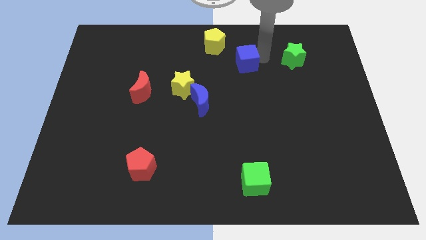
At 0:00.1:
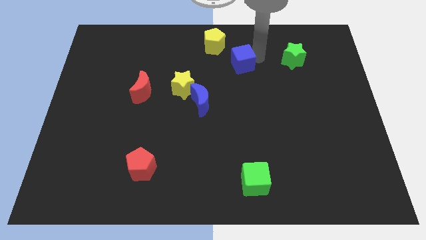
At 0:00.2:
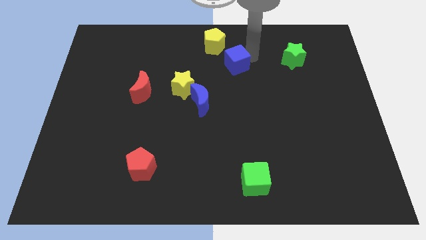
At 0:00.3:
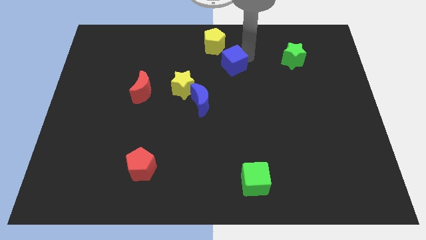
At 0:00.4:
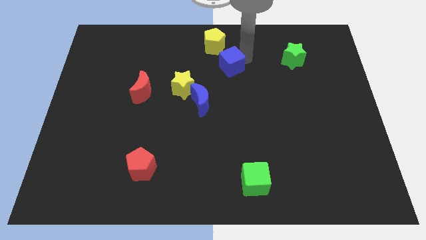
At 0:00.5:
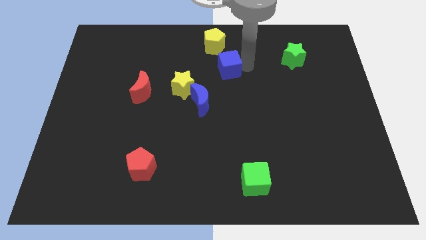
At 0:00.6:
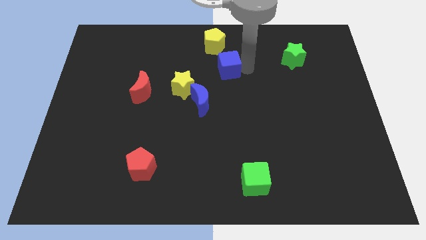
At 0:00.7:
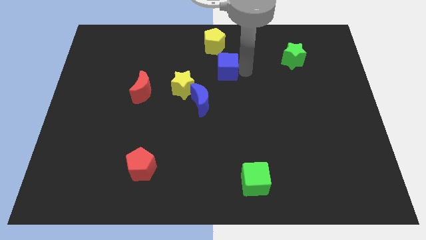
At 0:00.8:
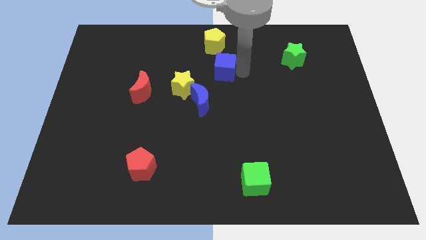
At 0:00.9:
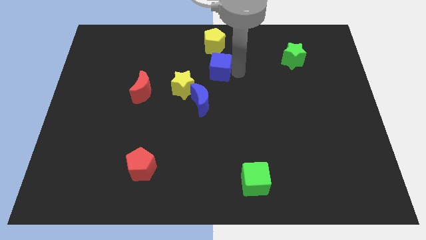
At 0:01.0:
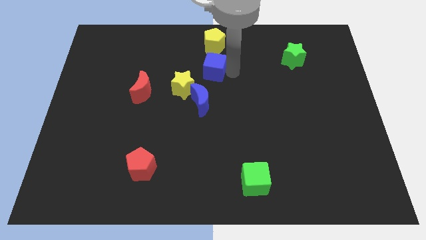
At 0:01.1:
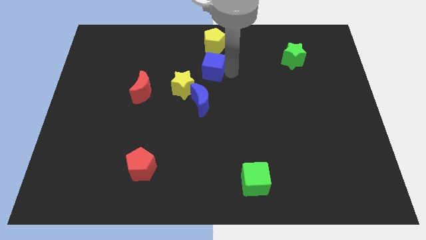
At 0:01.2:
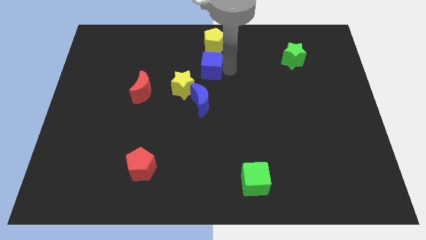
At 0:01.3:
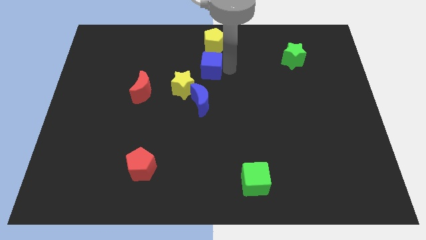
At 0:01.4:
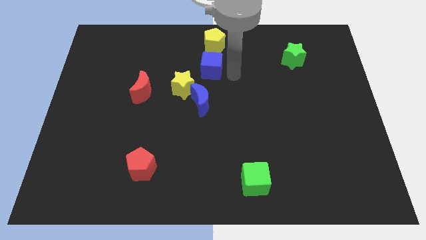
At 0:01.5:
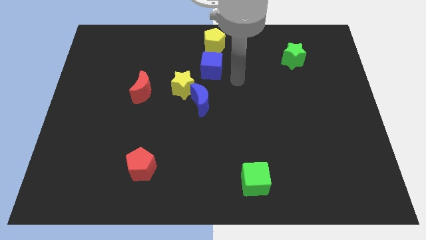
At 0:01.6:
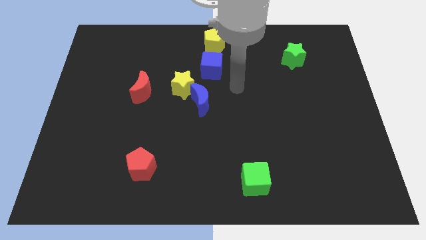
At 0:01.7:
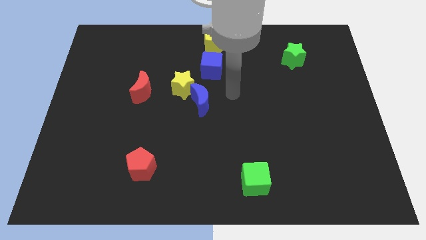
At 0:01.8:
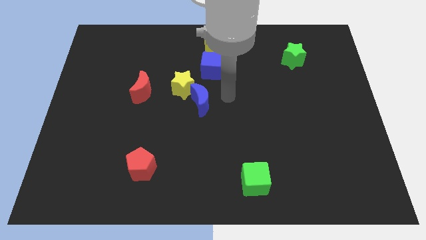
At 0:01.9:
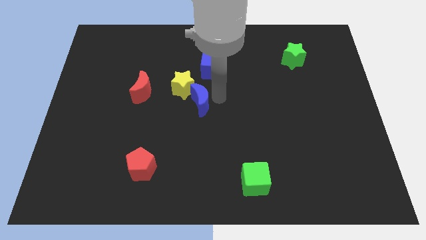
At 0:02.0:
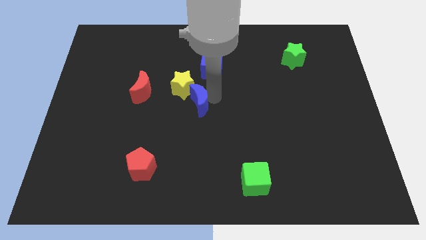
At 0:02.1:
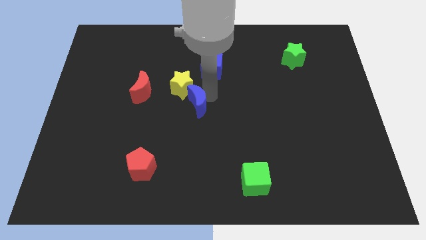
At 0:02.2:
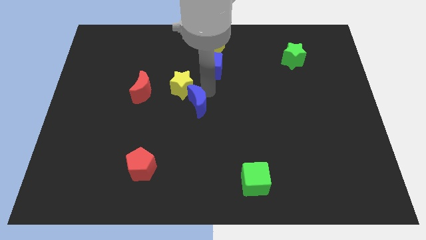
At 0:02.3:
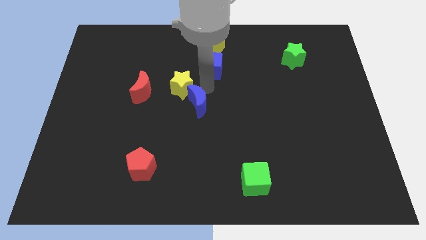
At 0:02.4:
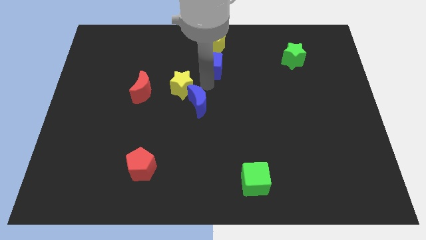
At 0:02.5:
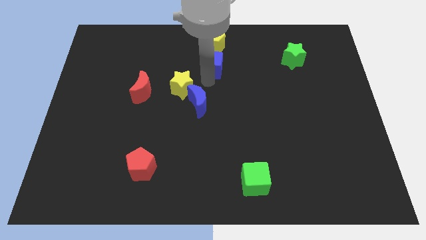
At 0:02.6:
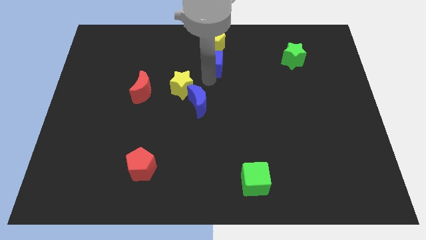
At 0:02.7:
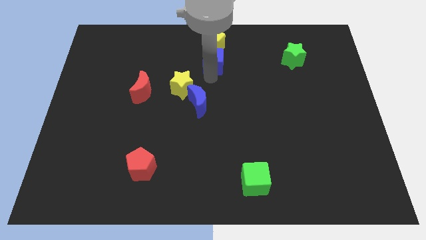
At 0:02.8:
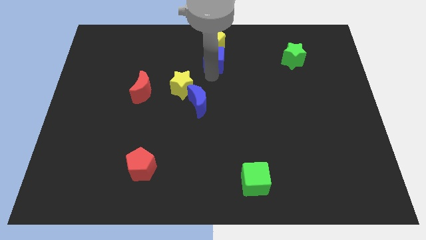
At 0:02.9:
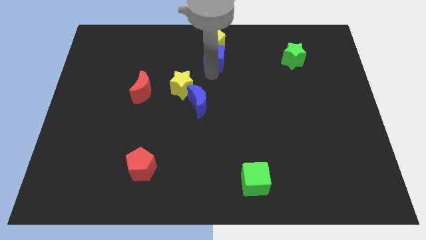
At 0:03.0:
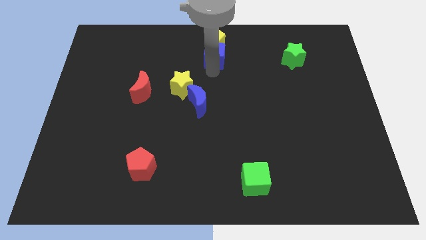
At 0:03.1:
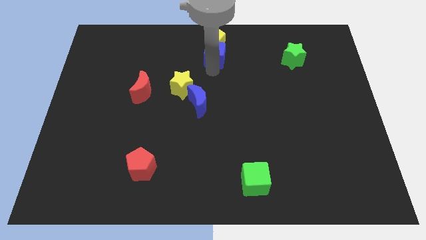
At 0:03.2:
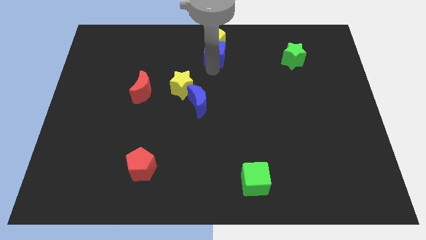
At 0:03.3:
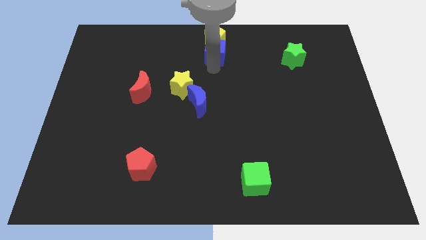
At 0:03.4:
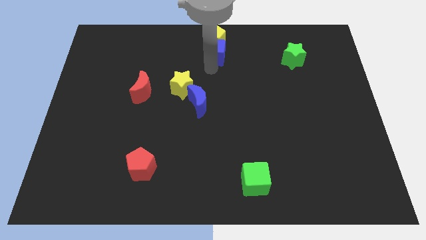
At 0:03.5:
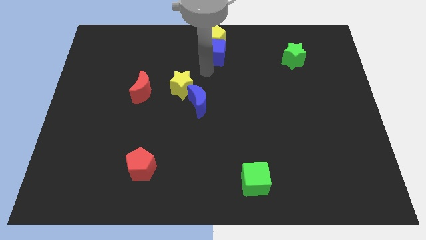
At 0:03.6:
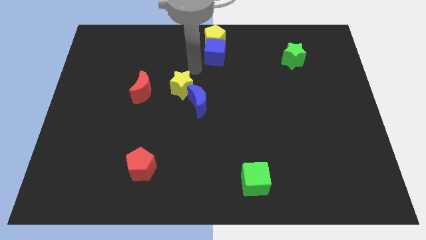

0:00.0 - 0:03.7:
push the blue cube and place it below the yellow pentagon

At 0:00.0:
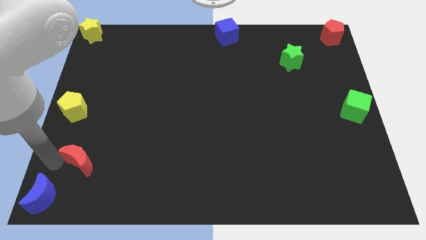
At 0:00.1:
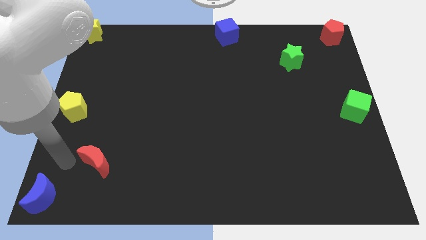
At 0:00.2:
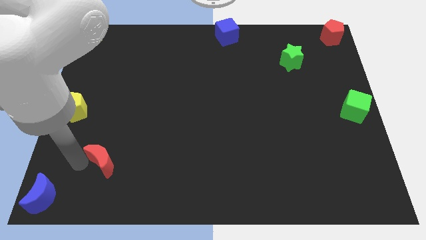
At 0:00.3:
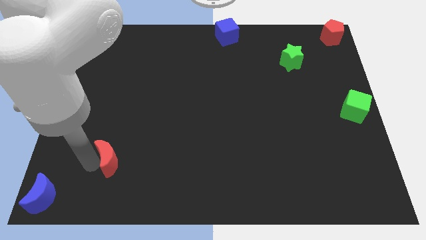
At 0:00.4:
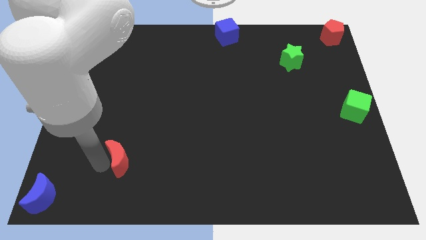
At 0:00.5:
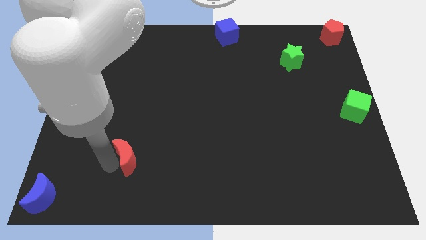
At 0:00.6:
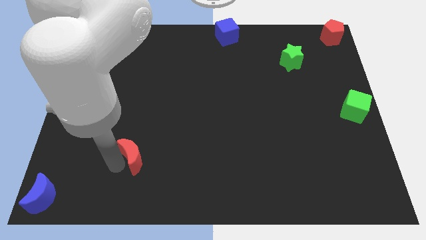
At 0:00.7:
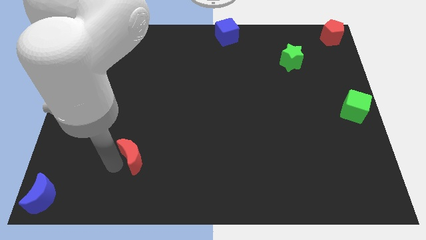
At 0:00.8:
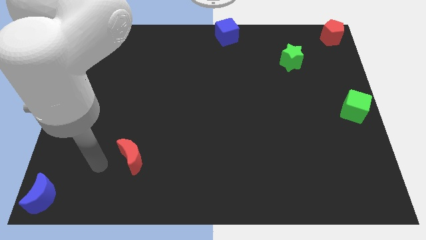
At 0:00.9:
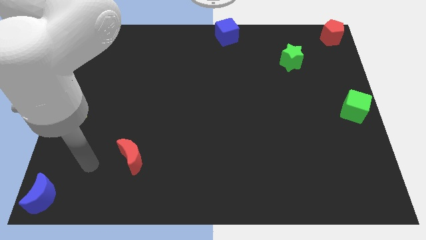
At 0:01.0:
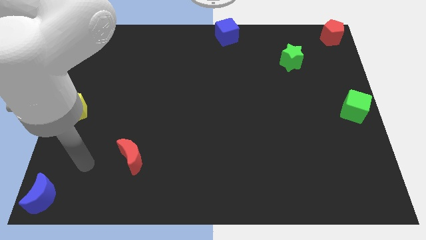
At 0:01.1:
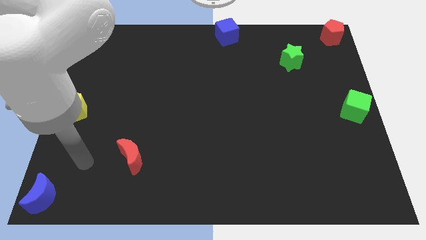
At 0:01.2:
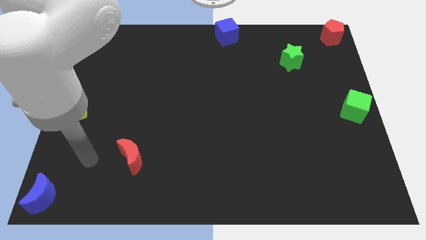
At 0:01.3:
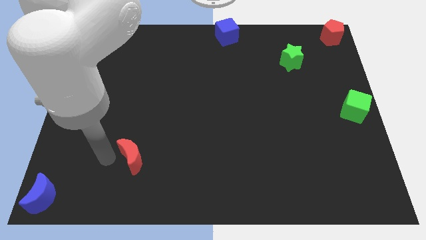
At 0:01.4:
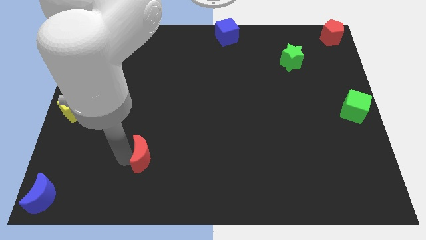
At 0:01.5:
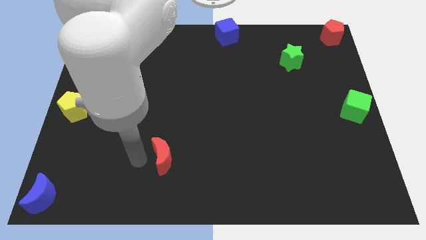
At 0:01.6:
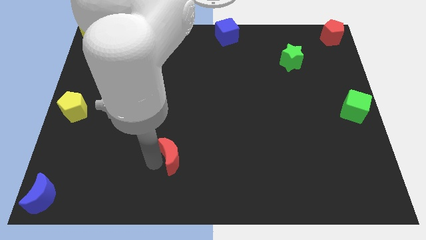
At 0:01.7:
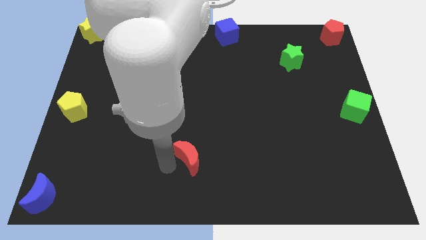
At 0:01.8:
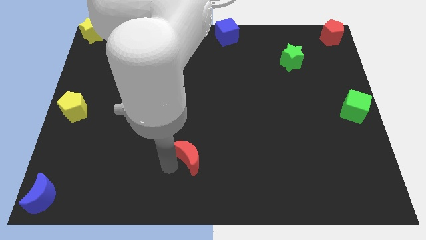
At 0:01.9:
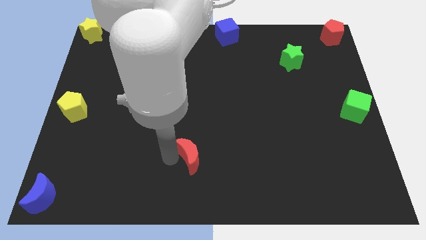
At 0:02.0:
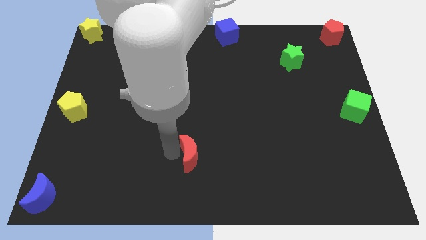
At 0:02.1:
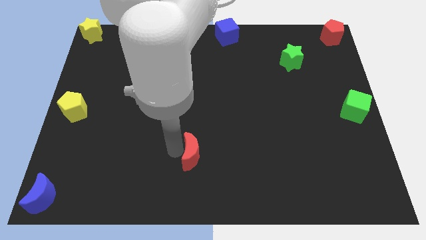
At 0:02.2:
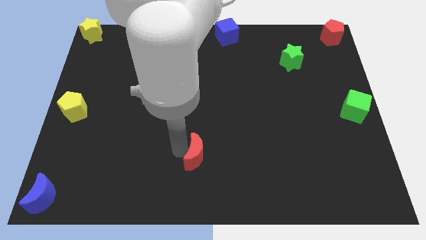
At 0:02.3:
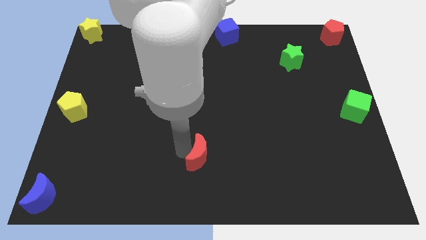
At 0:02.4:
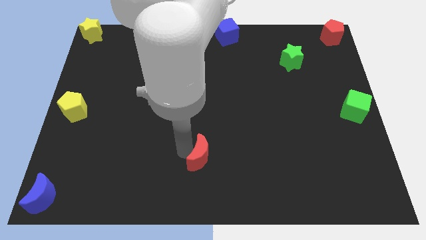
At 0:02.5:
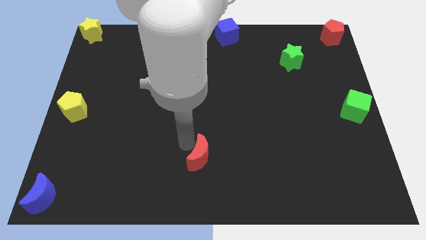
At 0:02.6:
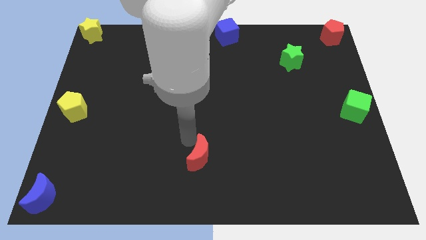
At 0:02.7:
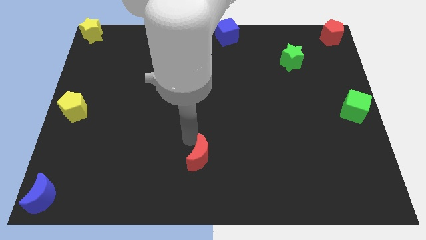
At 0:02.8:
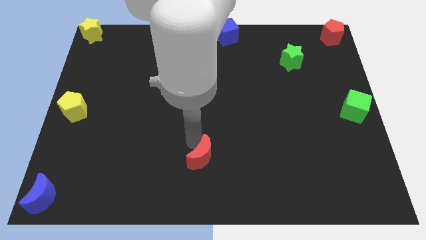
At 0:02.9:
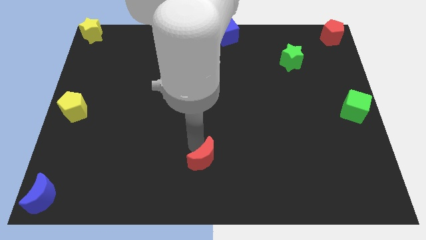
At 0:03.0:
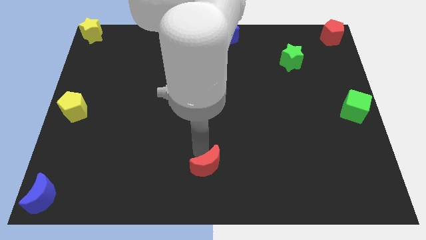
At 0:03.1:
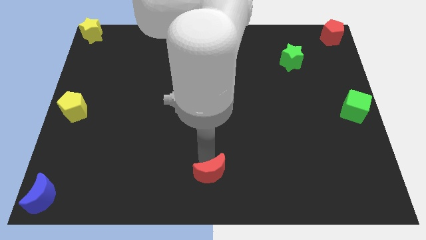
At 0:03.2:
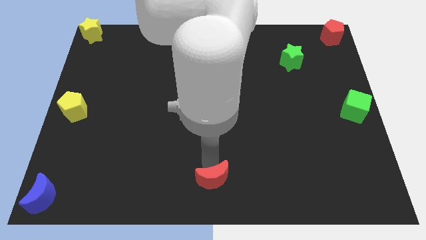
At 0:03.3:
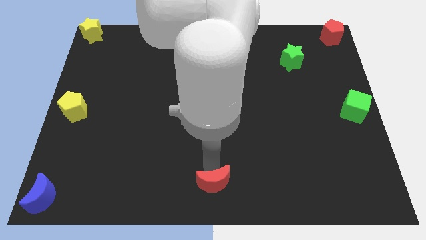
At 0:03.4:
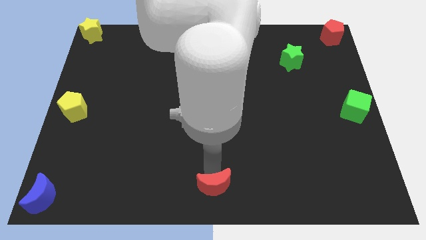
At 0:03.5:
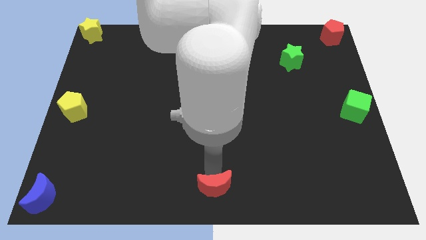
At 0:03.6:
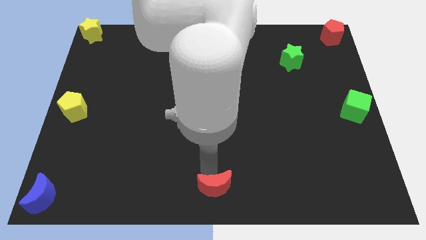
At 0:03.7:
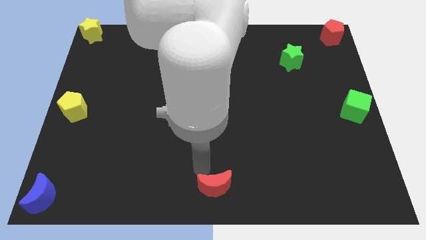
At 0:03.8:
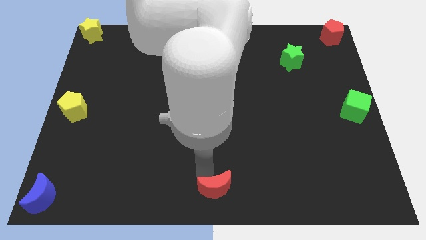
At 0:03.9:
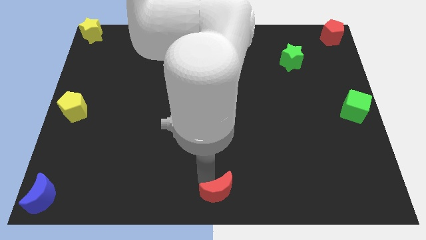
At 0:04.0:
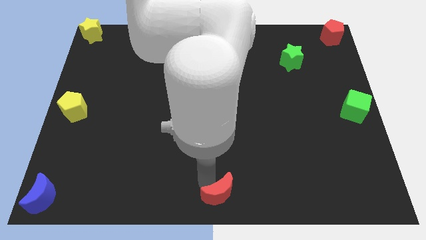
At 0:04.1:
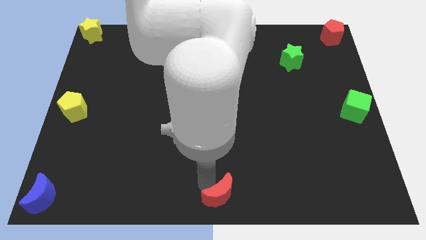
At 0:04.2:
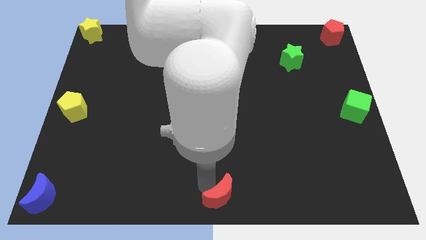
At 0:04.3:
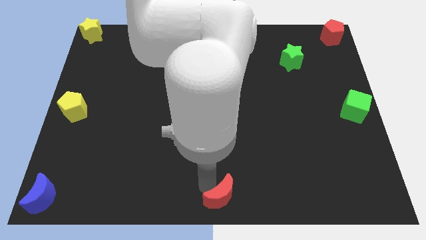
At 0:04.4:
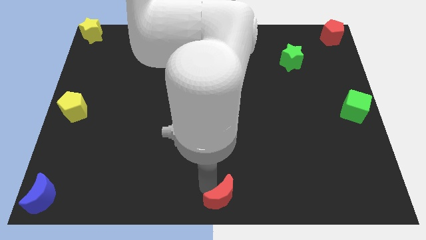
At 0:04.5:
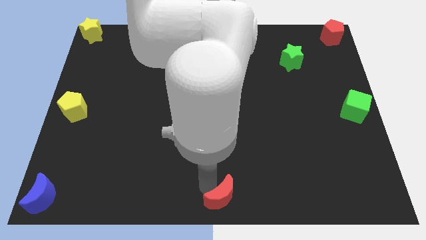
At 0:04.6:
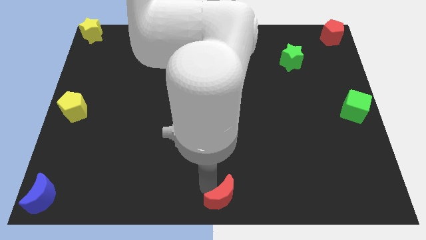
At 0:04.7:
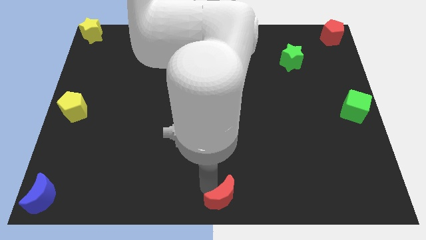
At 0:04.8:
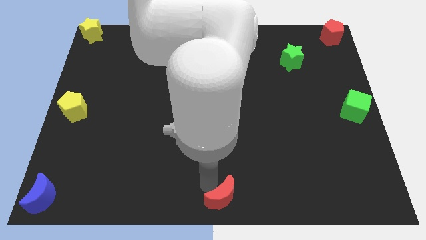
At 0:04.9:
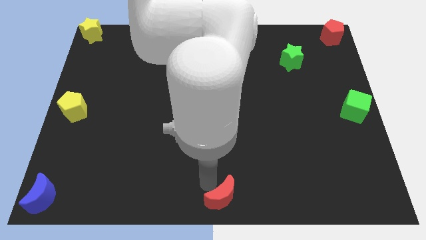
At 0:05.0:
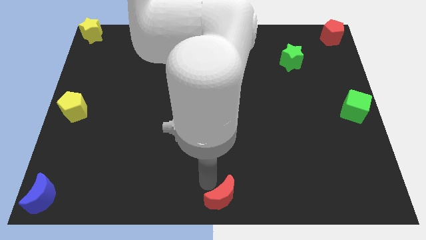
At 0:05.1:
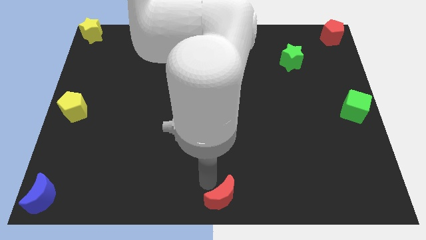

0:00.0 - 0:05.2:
slide red moon to the center bottom of the board
